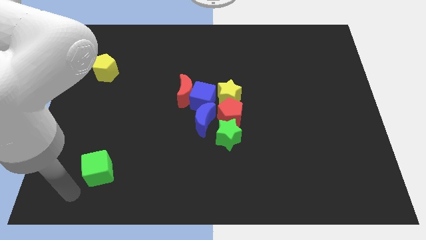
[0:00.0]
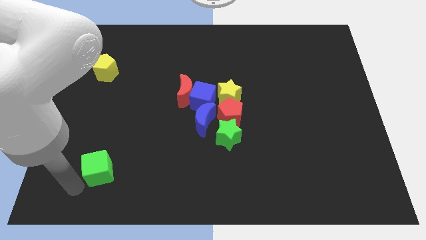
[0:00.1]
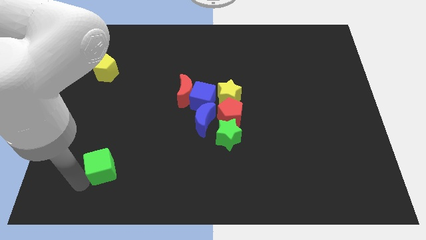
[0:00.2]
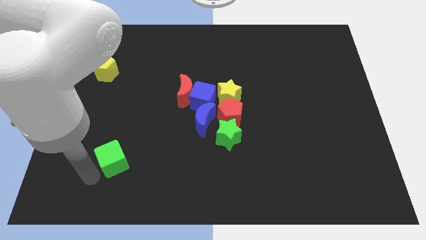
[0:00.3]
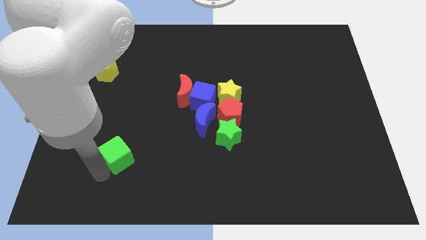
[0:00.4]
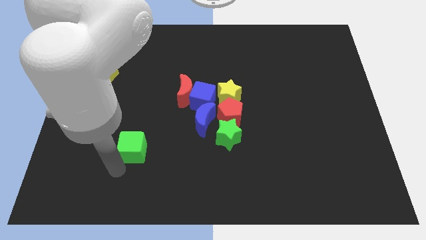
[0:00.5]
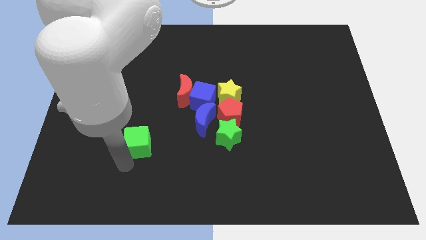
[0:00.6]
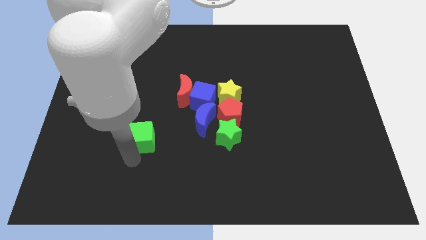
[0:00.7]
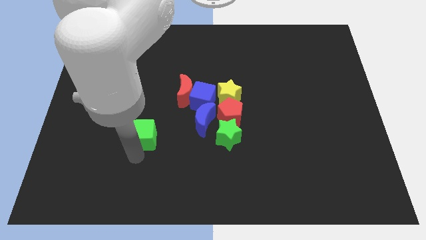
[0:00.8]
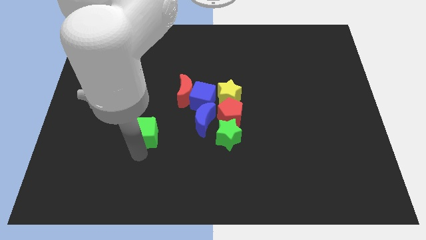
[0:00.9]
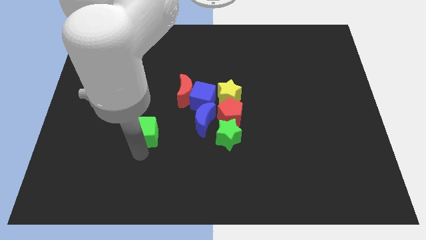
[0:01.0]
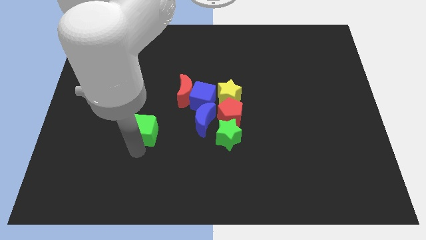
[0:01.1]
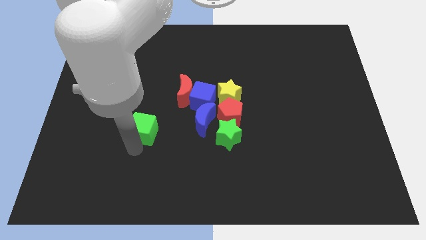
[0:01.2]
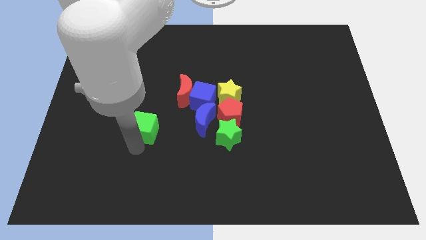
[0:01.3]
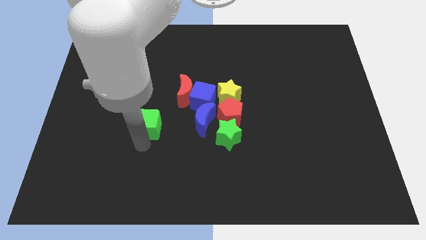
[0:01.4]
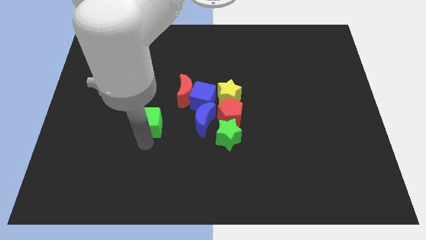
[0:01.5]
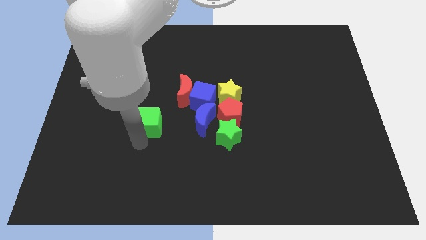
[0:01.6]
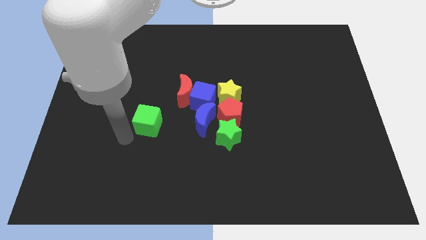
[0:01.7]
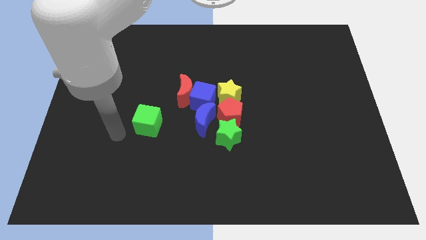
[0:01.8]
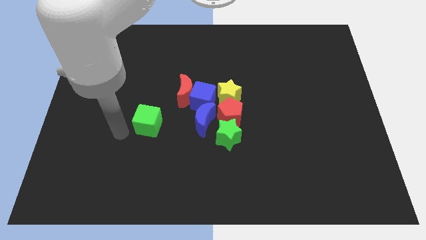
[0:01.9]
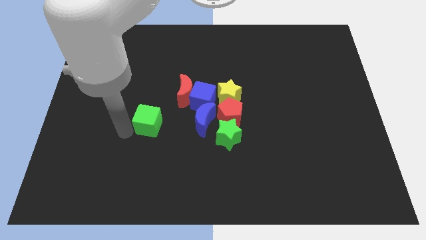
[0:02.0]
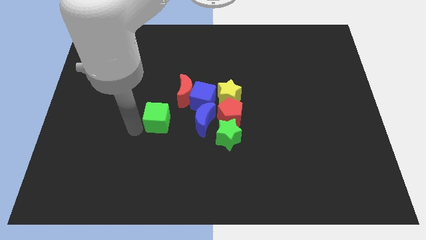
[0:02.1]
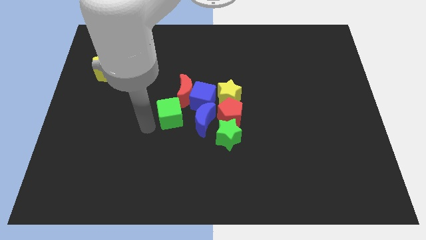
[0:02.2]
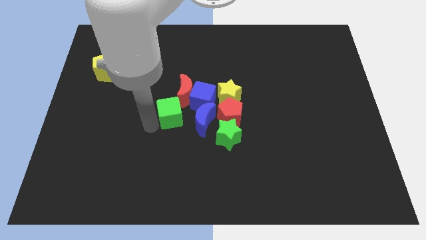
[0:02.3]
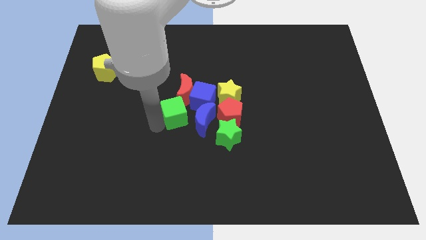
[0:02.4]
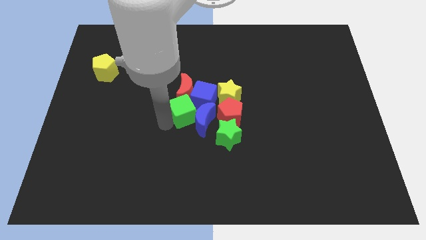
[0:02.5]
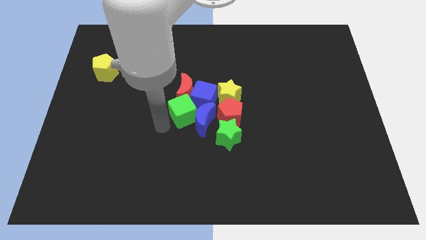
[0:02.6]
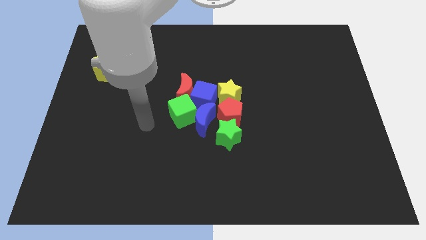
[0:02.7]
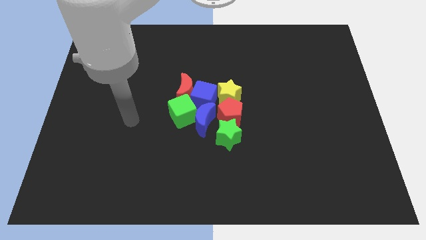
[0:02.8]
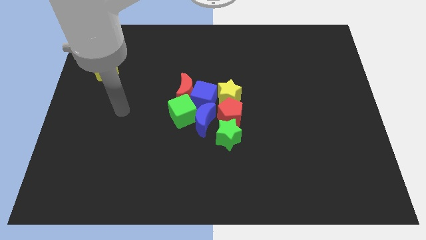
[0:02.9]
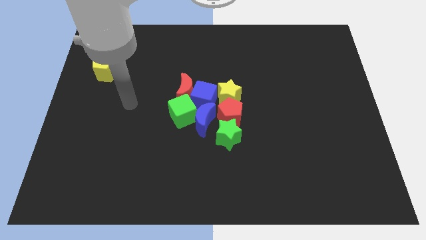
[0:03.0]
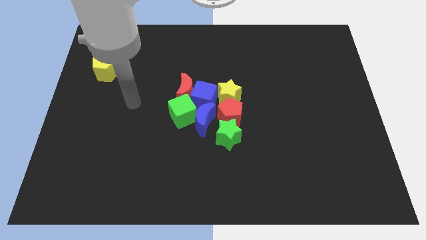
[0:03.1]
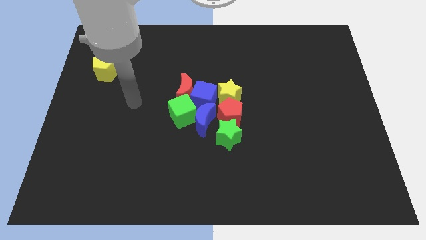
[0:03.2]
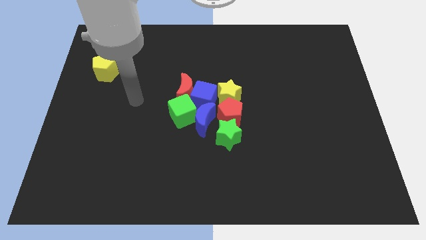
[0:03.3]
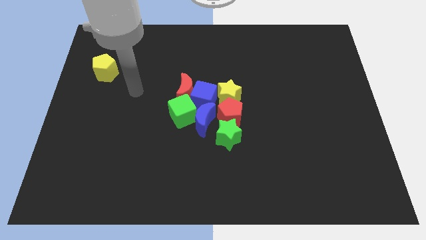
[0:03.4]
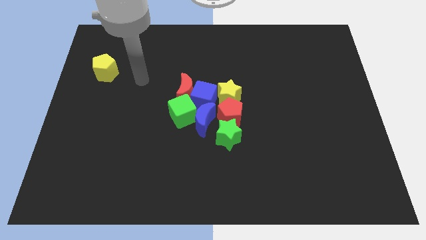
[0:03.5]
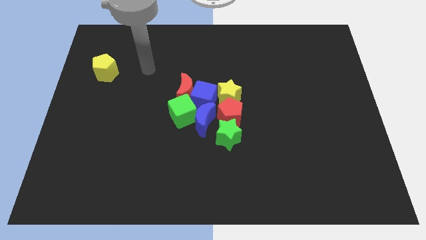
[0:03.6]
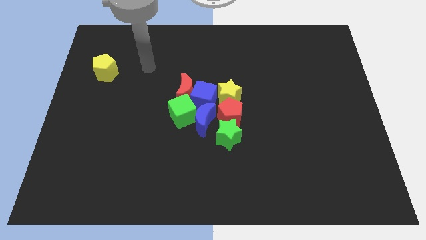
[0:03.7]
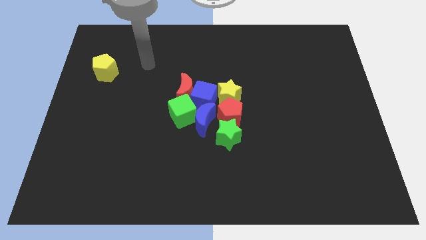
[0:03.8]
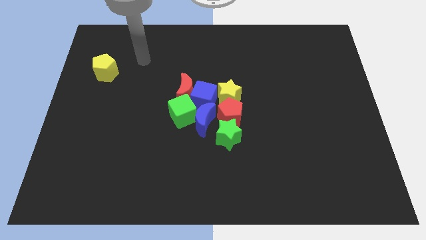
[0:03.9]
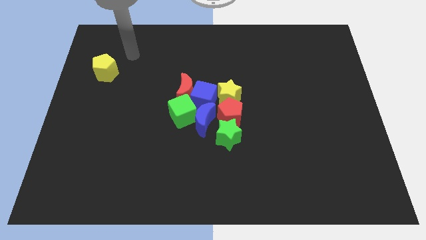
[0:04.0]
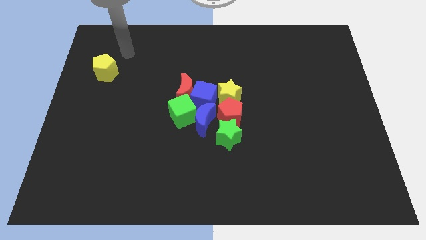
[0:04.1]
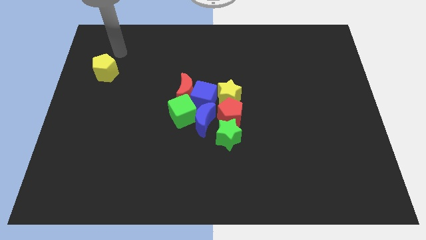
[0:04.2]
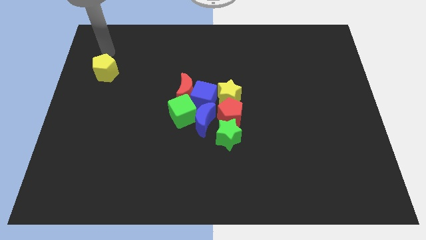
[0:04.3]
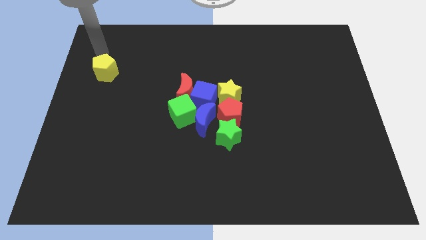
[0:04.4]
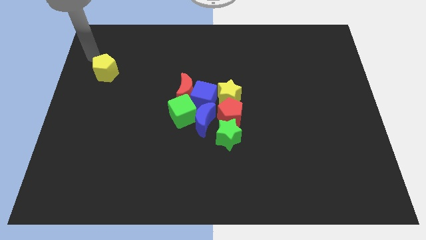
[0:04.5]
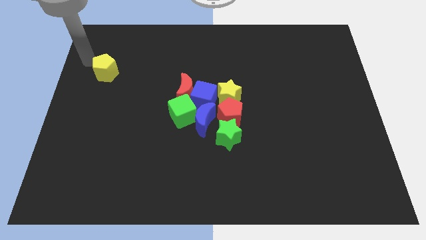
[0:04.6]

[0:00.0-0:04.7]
move the green cube to bottom of red crescent

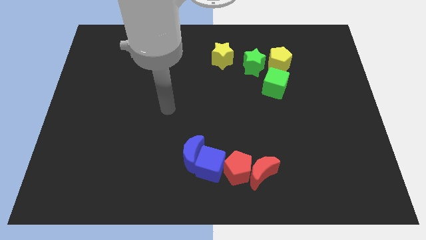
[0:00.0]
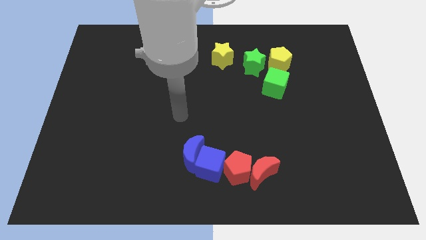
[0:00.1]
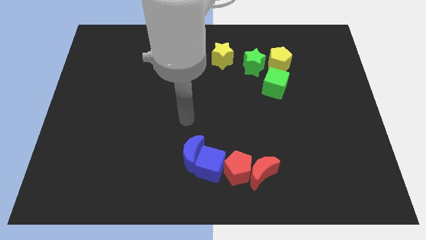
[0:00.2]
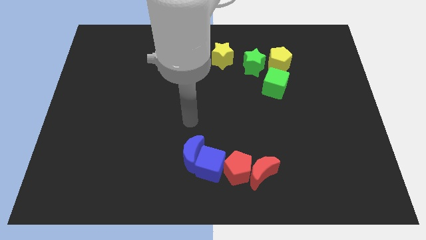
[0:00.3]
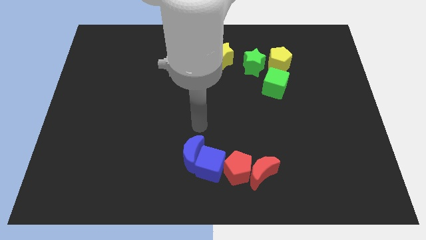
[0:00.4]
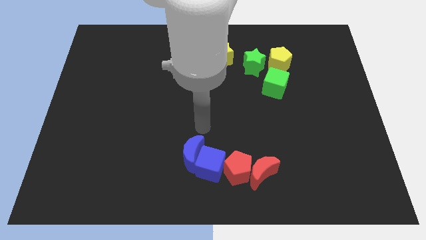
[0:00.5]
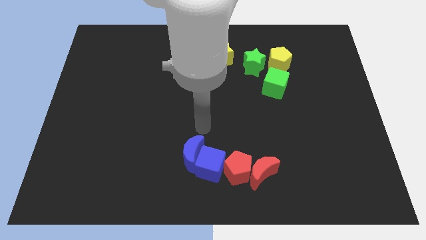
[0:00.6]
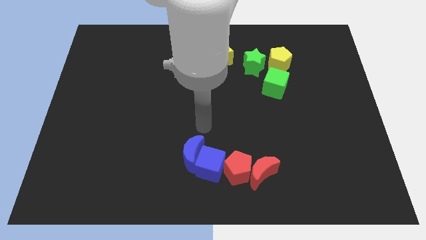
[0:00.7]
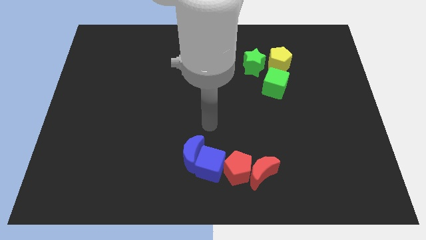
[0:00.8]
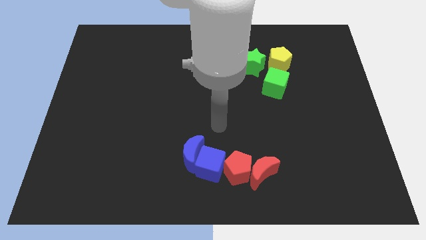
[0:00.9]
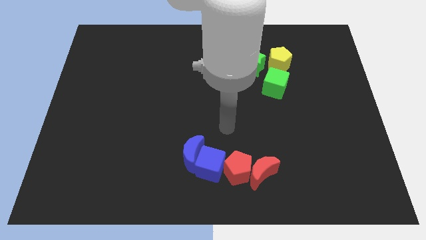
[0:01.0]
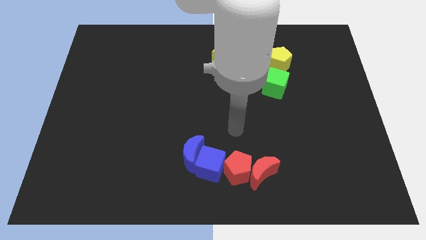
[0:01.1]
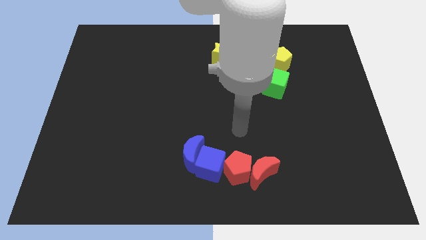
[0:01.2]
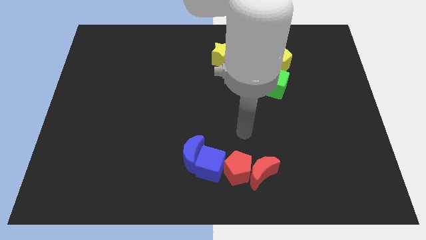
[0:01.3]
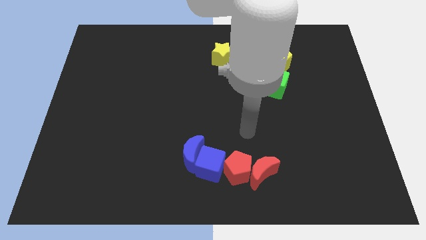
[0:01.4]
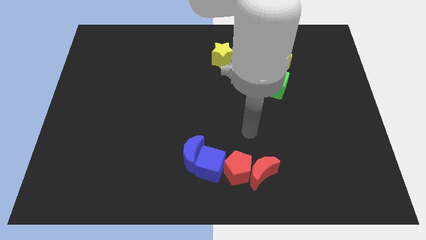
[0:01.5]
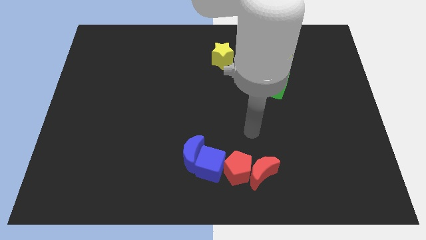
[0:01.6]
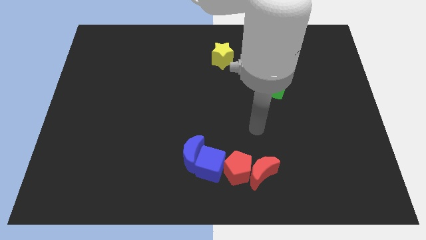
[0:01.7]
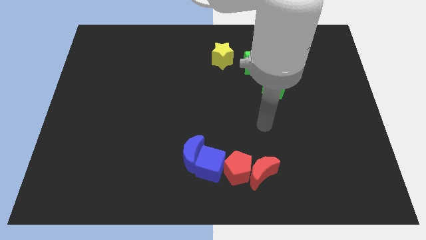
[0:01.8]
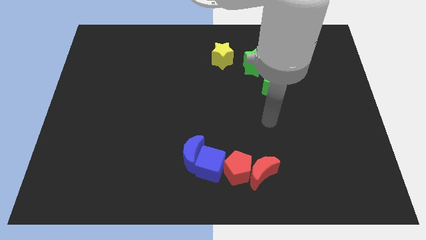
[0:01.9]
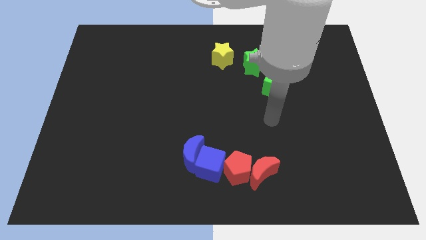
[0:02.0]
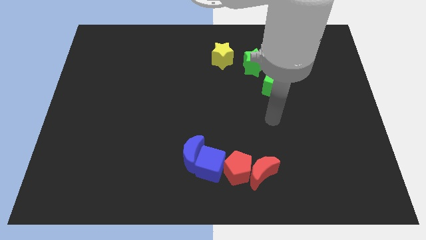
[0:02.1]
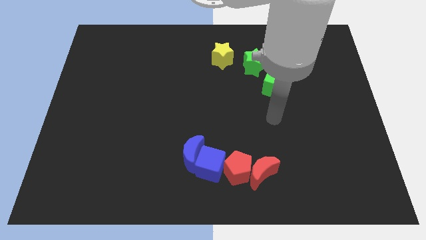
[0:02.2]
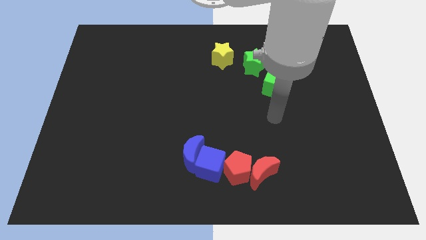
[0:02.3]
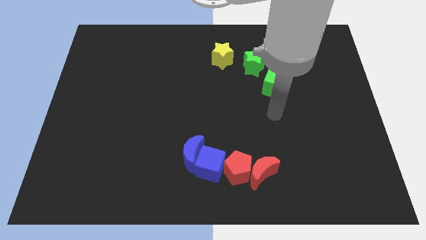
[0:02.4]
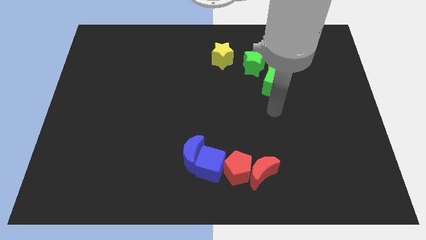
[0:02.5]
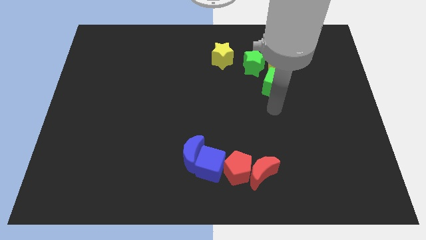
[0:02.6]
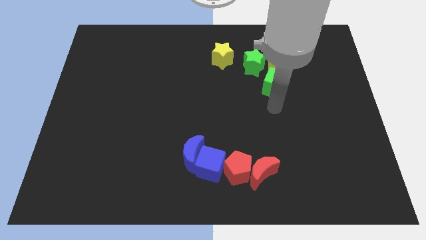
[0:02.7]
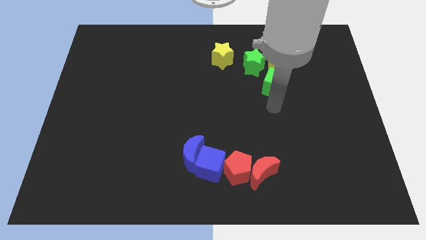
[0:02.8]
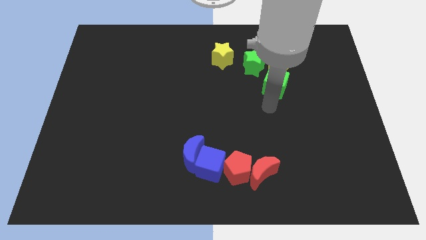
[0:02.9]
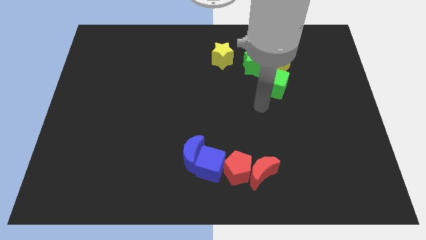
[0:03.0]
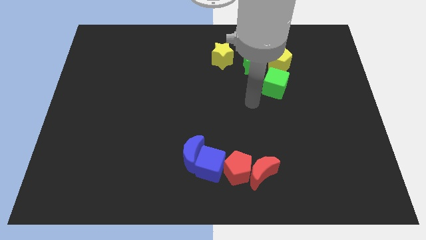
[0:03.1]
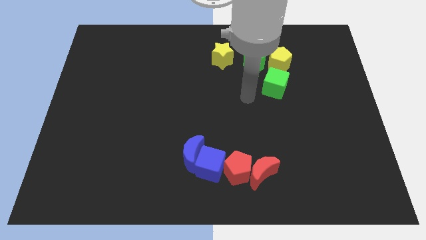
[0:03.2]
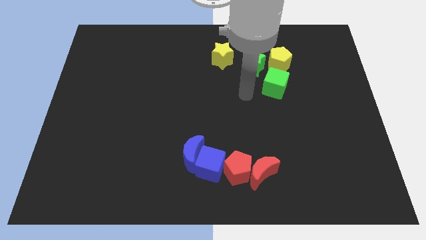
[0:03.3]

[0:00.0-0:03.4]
move arm near green star

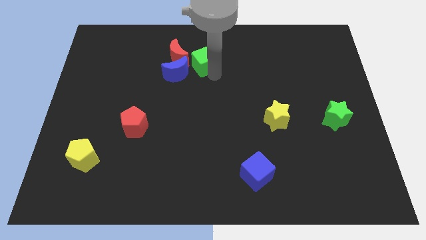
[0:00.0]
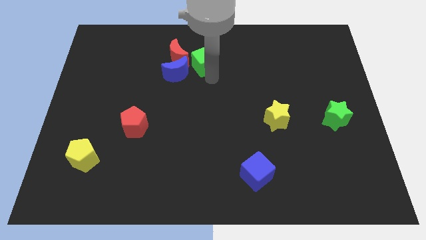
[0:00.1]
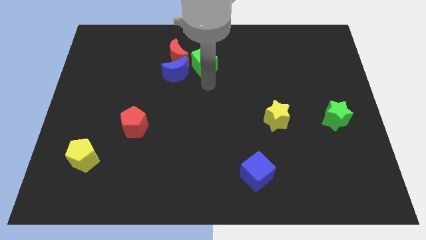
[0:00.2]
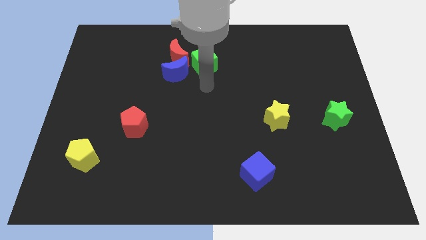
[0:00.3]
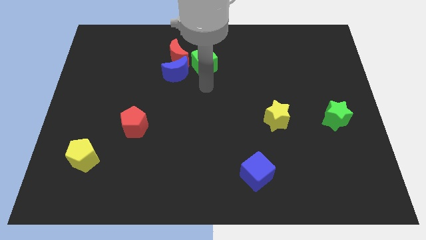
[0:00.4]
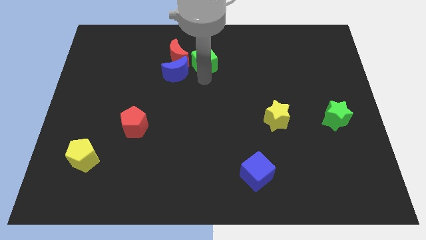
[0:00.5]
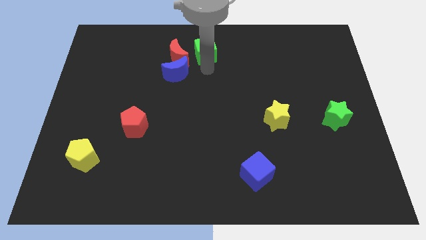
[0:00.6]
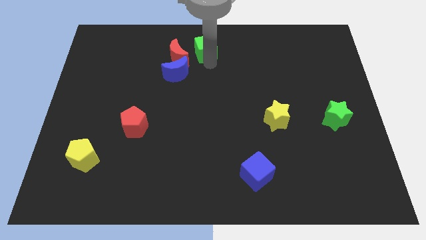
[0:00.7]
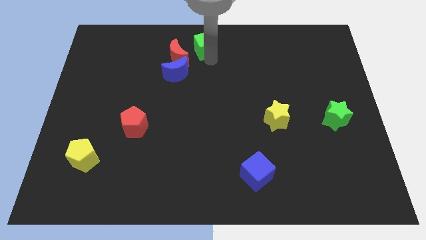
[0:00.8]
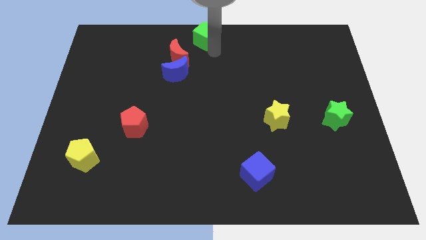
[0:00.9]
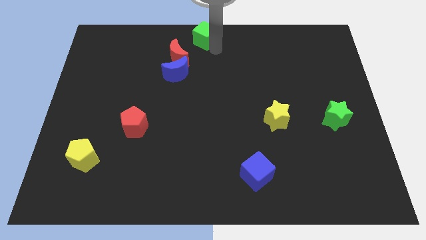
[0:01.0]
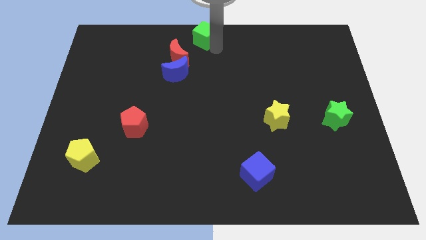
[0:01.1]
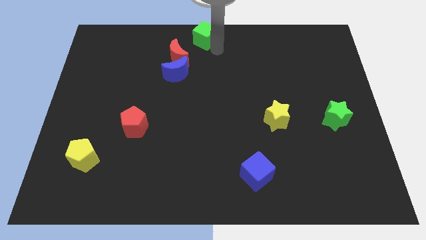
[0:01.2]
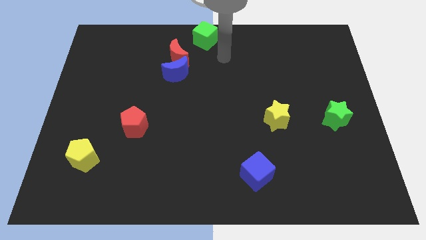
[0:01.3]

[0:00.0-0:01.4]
move the green cube to the top center of the board
